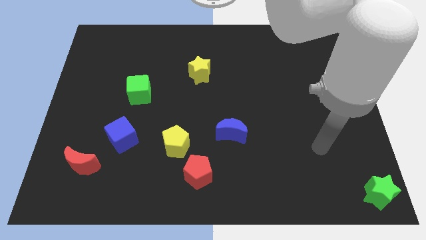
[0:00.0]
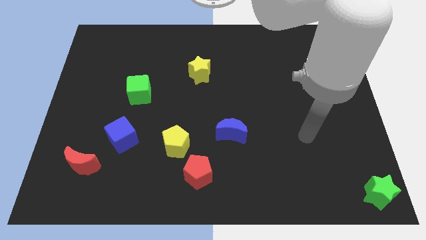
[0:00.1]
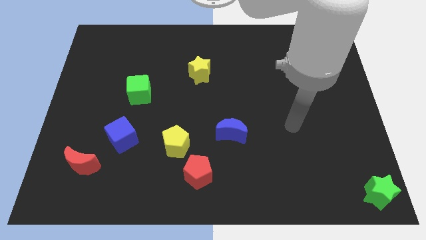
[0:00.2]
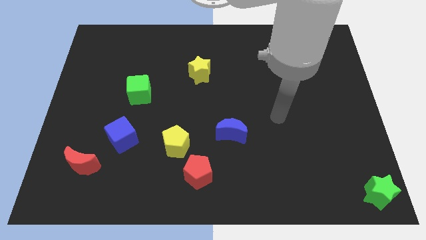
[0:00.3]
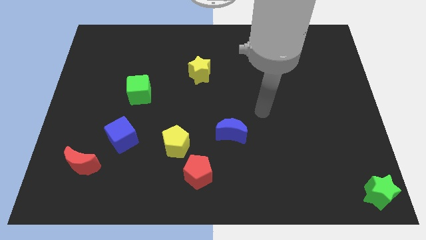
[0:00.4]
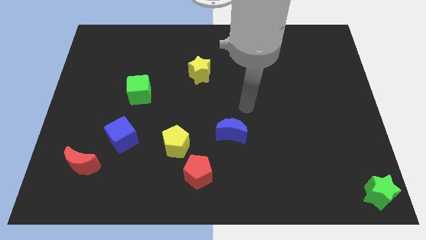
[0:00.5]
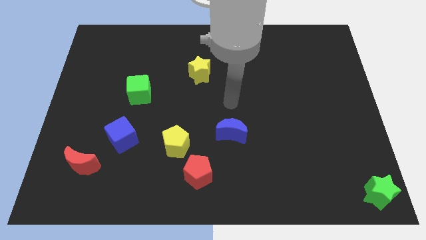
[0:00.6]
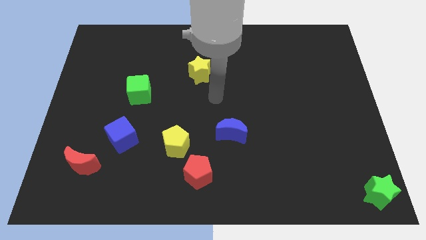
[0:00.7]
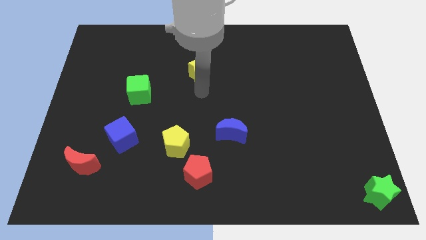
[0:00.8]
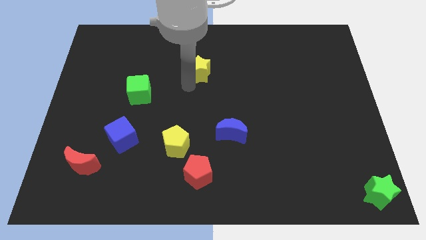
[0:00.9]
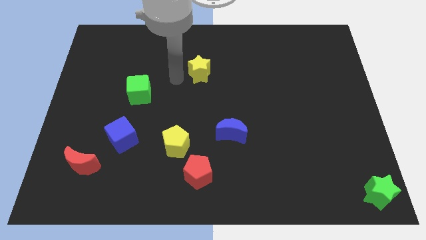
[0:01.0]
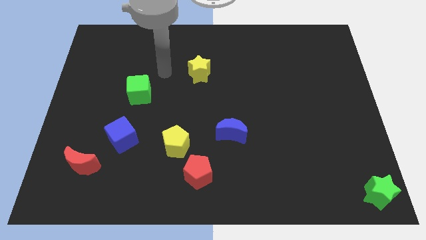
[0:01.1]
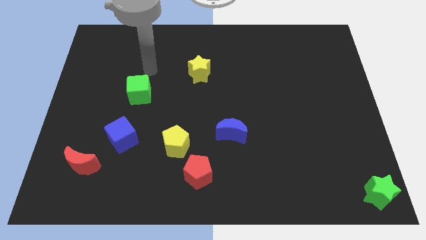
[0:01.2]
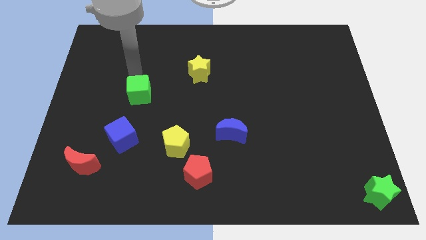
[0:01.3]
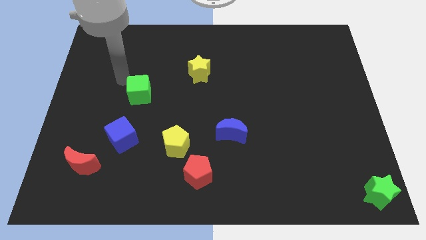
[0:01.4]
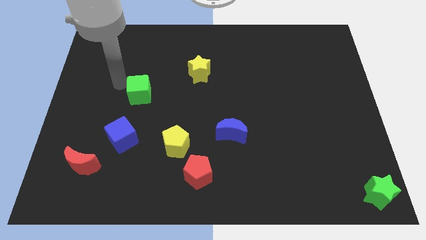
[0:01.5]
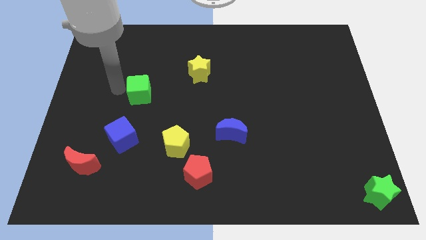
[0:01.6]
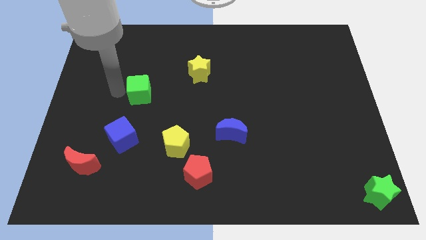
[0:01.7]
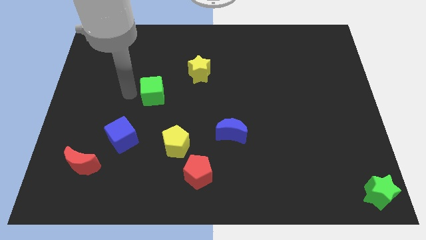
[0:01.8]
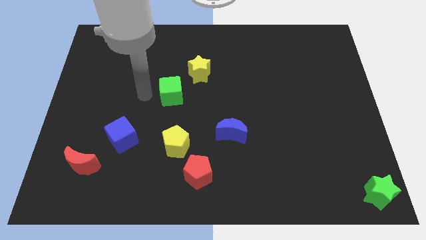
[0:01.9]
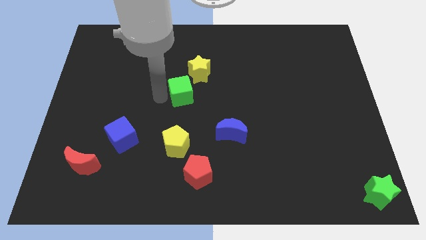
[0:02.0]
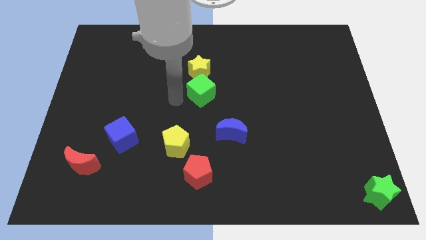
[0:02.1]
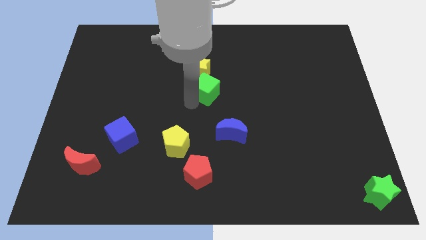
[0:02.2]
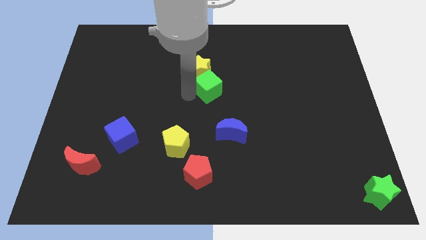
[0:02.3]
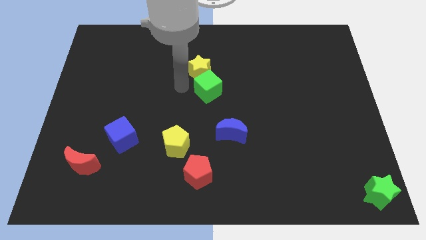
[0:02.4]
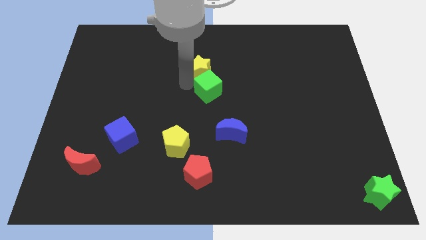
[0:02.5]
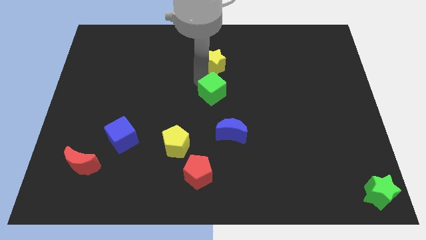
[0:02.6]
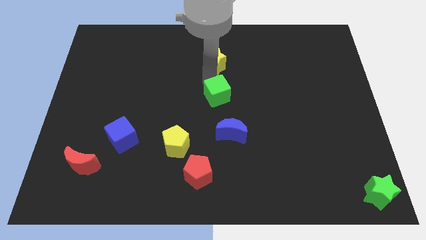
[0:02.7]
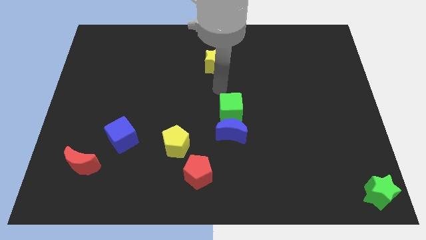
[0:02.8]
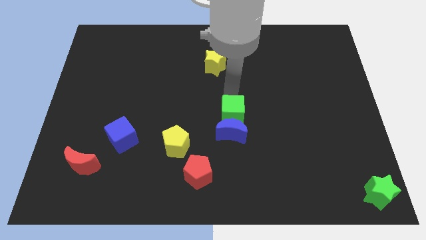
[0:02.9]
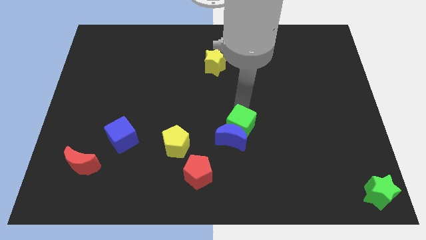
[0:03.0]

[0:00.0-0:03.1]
move green cube into blue moon

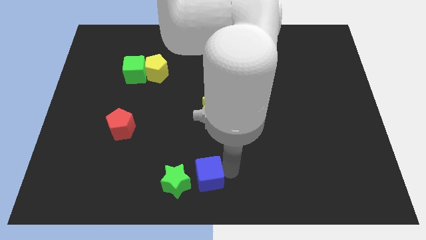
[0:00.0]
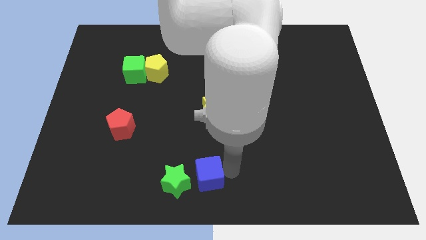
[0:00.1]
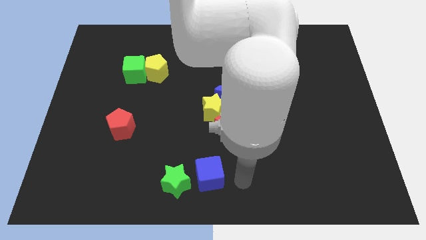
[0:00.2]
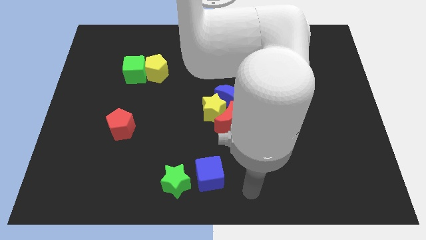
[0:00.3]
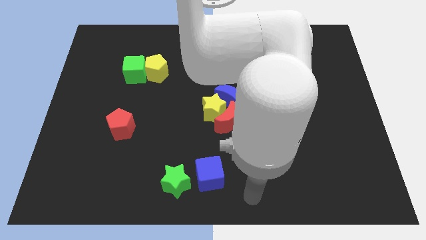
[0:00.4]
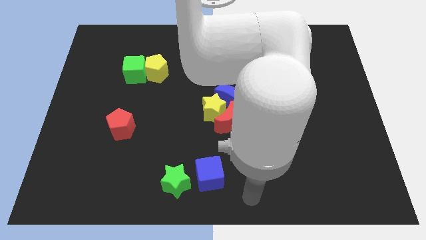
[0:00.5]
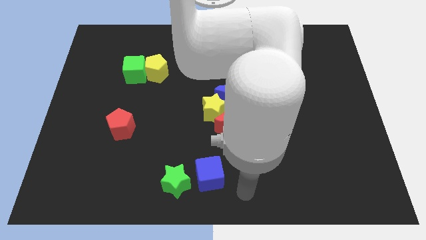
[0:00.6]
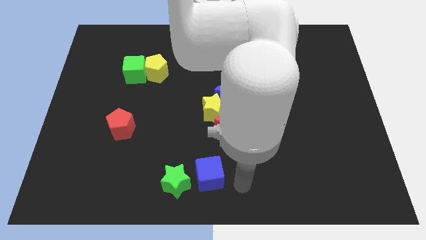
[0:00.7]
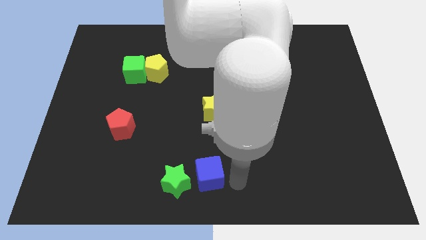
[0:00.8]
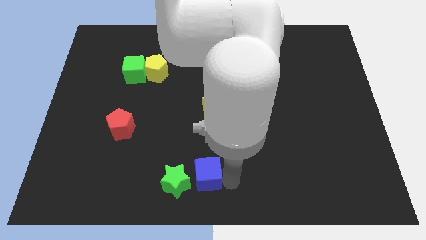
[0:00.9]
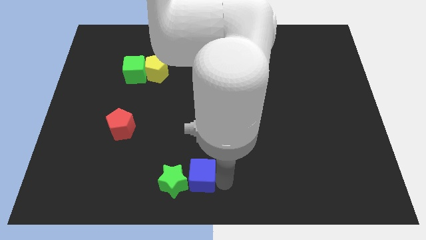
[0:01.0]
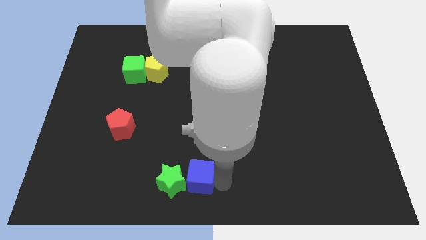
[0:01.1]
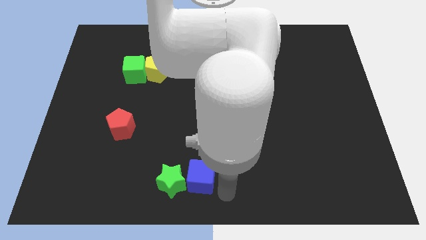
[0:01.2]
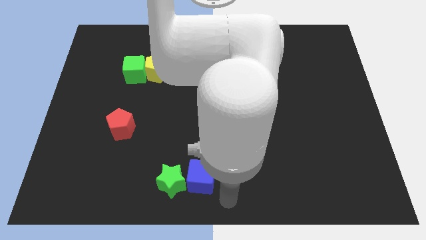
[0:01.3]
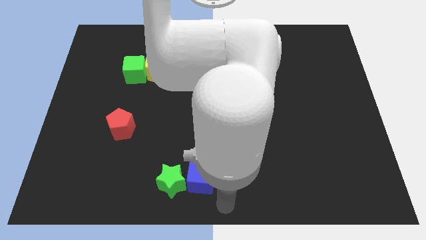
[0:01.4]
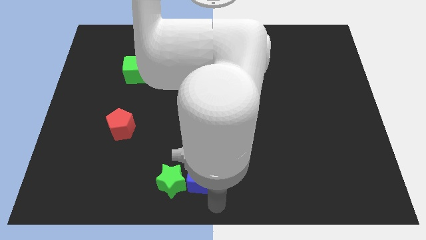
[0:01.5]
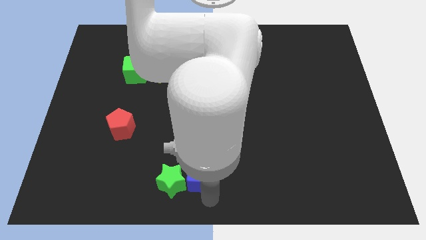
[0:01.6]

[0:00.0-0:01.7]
push the blue cube into the green star

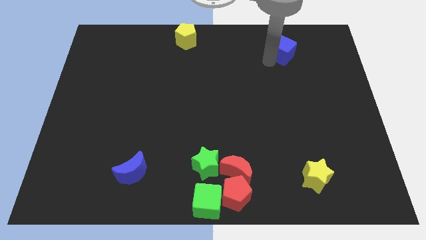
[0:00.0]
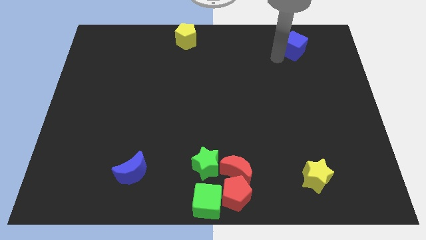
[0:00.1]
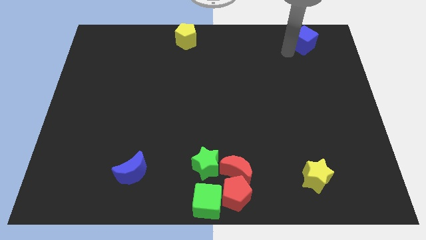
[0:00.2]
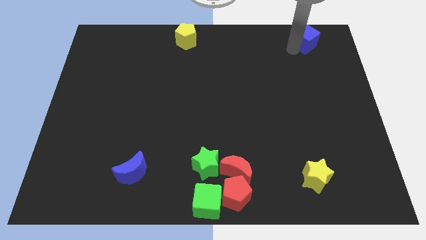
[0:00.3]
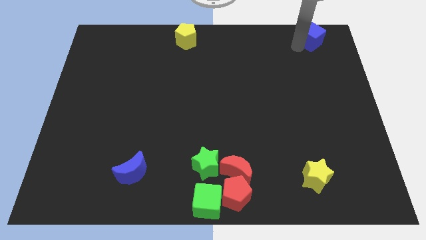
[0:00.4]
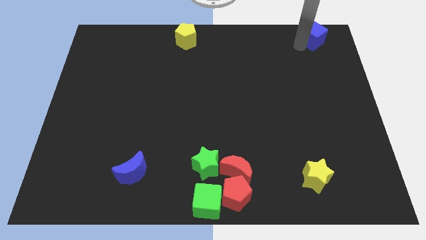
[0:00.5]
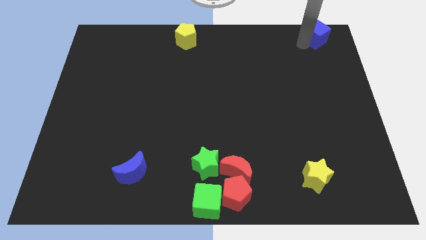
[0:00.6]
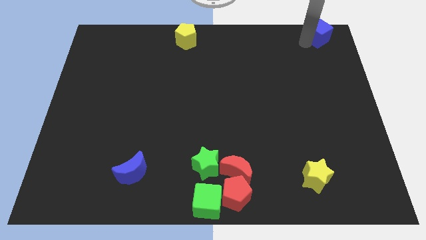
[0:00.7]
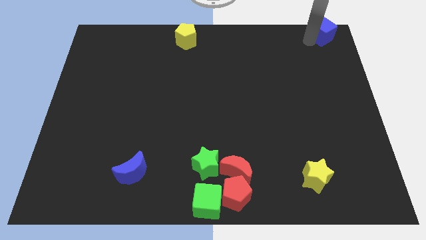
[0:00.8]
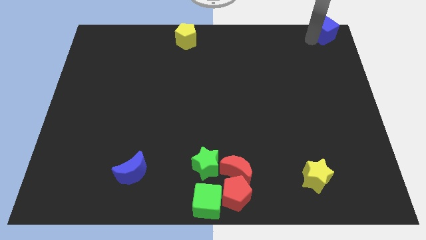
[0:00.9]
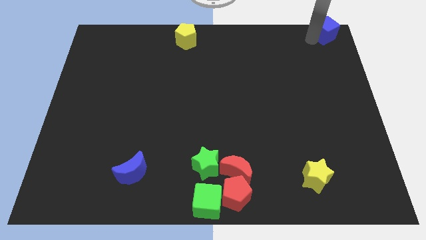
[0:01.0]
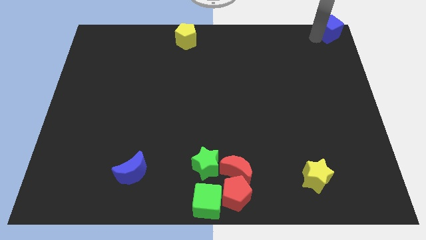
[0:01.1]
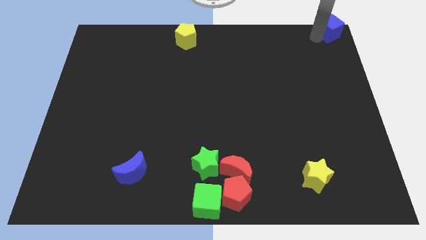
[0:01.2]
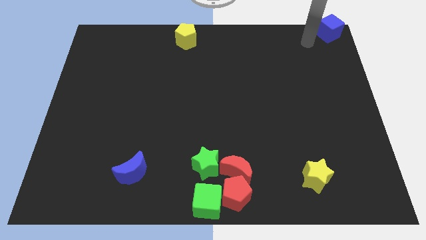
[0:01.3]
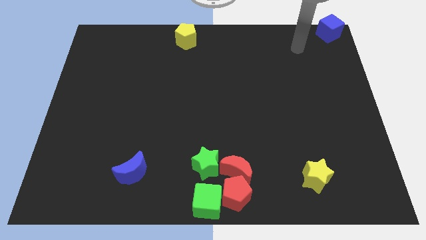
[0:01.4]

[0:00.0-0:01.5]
push blue cube to the top right corner

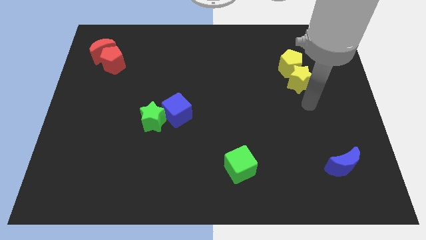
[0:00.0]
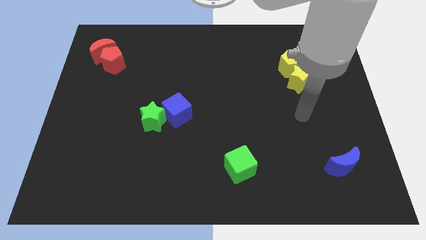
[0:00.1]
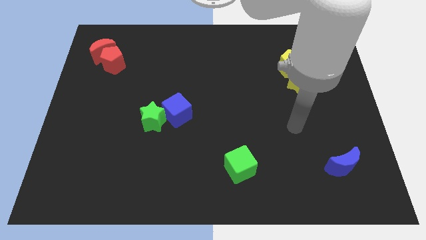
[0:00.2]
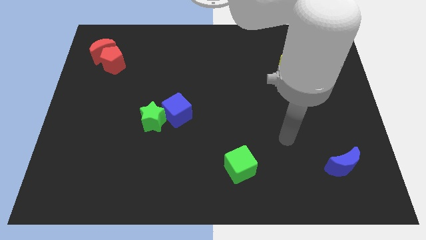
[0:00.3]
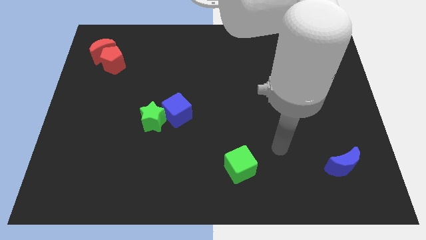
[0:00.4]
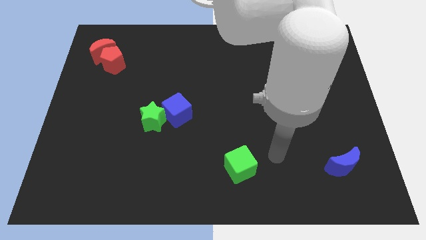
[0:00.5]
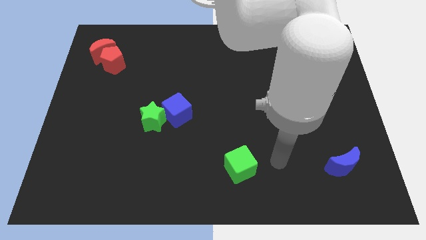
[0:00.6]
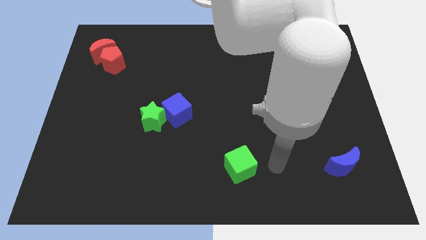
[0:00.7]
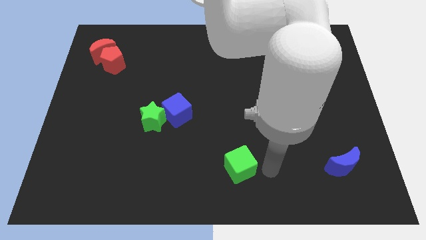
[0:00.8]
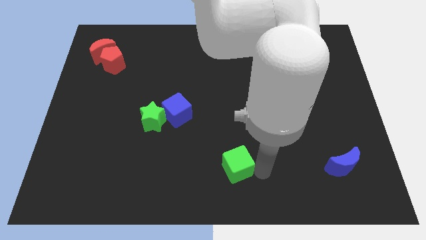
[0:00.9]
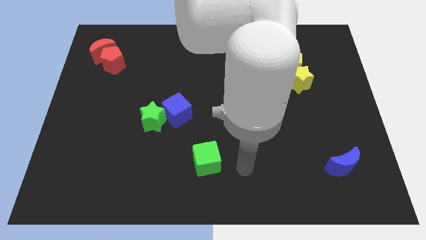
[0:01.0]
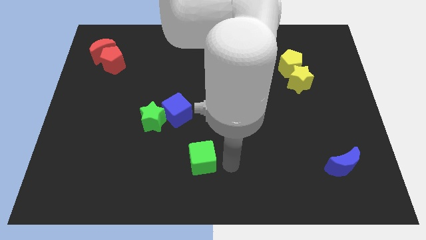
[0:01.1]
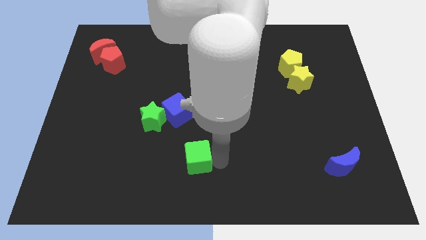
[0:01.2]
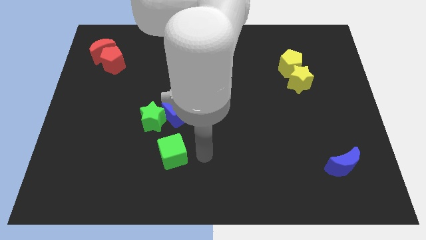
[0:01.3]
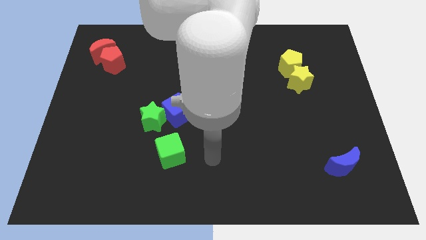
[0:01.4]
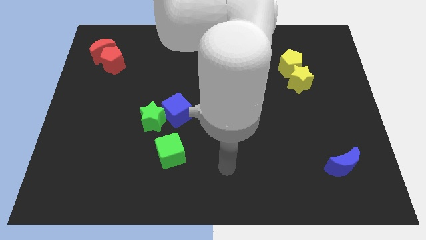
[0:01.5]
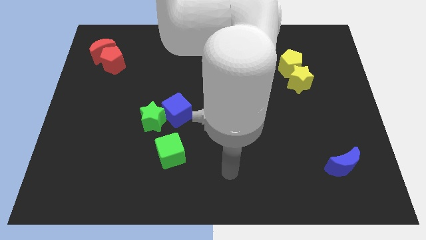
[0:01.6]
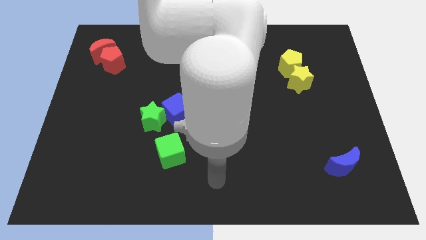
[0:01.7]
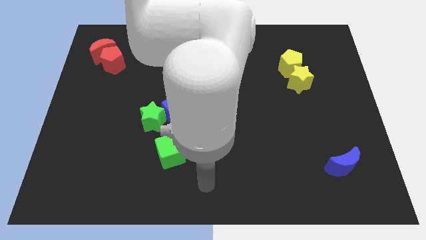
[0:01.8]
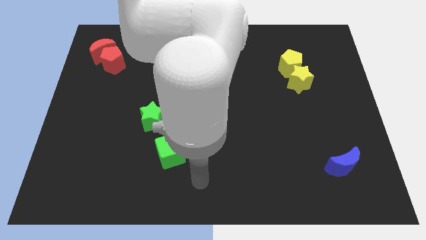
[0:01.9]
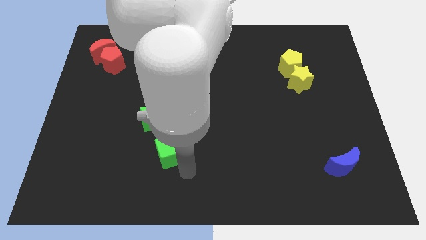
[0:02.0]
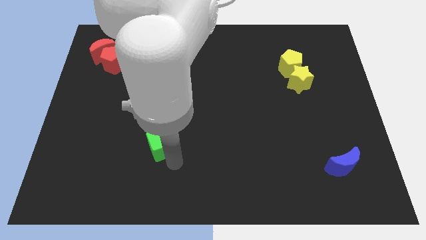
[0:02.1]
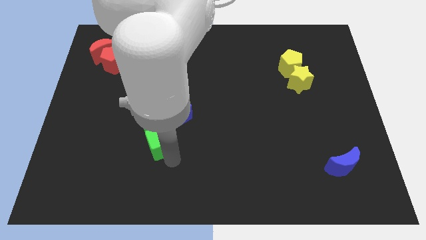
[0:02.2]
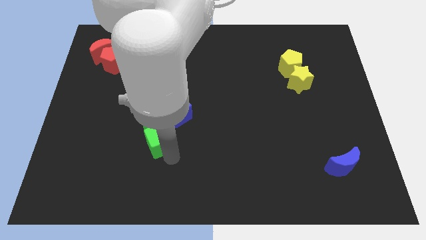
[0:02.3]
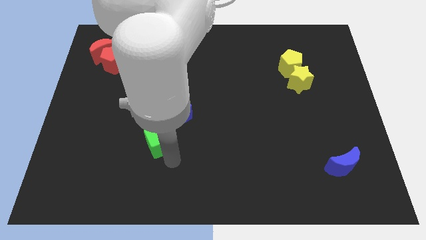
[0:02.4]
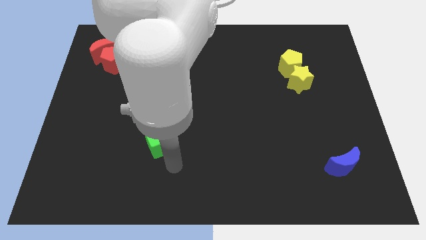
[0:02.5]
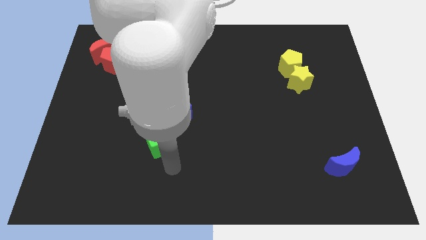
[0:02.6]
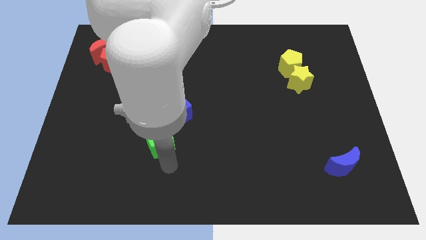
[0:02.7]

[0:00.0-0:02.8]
push green cube to the bottom of the green star
